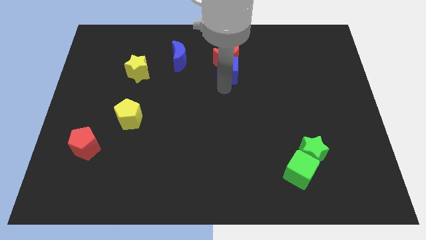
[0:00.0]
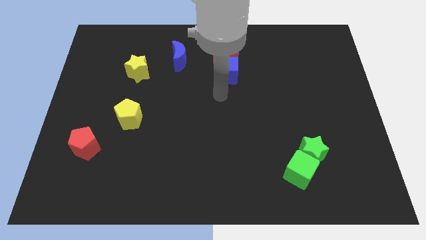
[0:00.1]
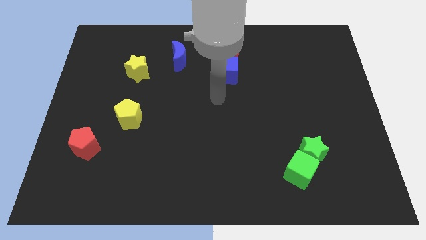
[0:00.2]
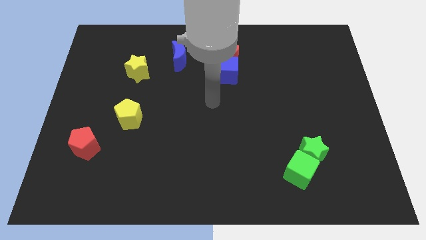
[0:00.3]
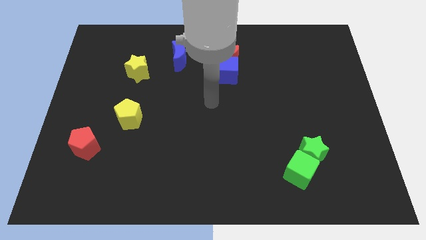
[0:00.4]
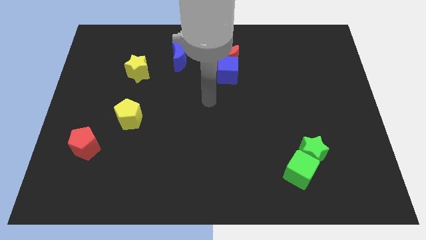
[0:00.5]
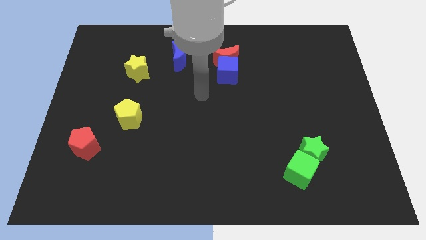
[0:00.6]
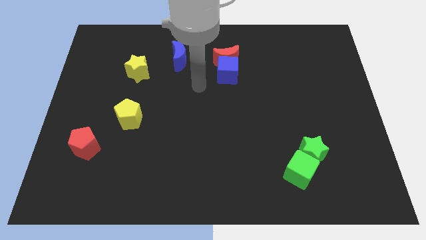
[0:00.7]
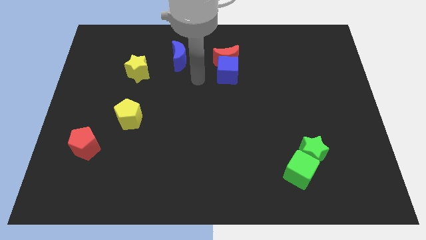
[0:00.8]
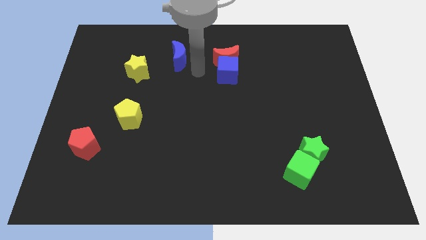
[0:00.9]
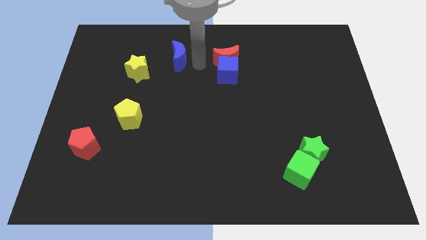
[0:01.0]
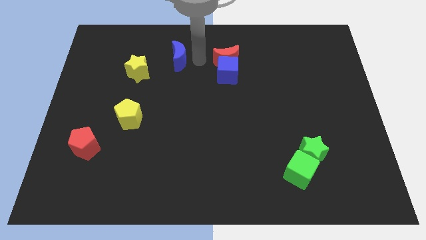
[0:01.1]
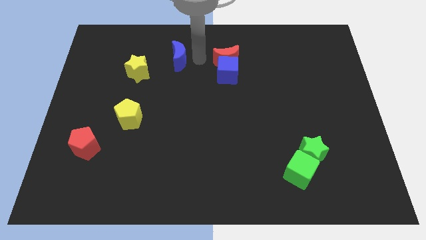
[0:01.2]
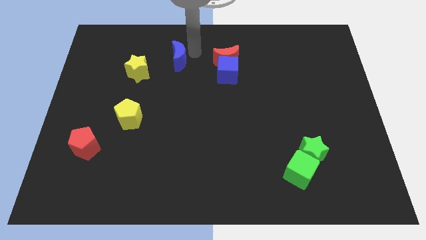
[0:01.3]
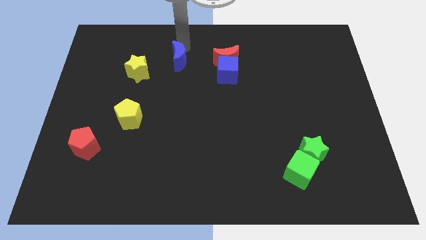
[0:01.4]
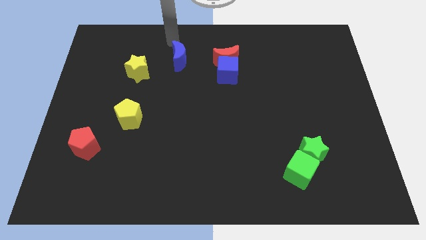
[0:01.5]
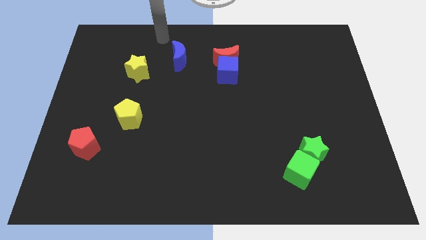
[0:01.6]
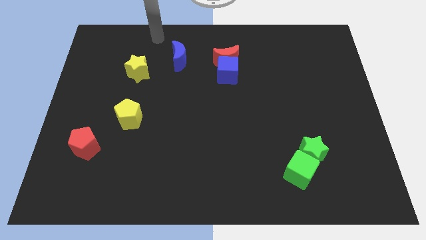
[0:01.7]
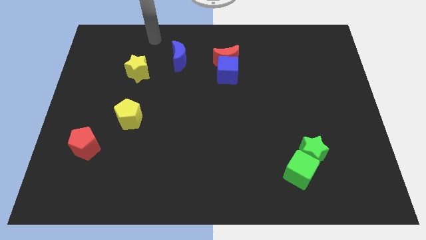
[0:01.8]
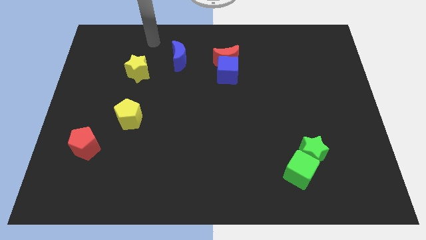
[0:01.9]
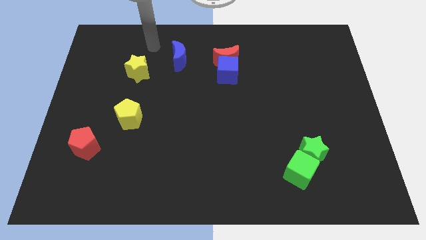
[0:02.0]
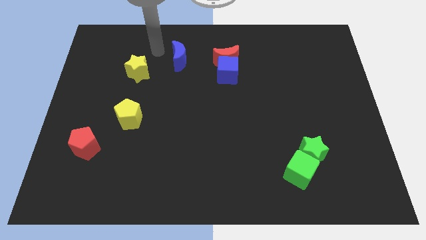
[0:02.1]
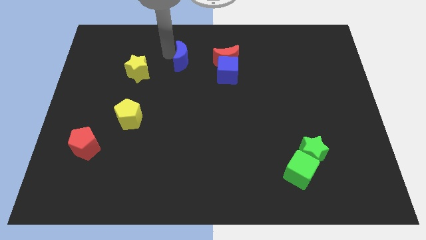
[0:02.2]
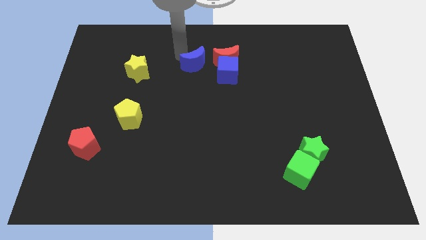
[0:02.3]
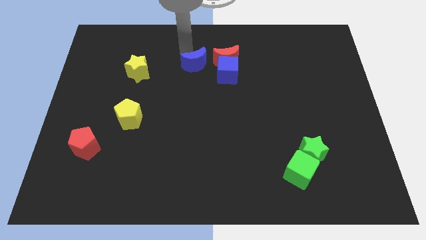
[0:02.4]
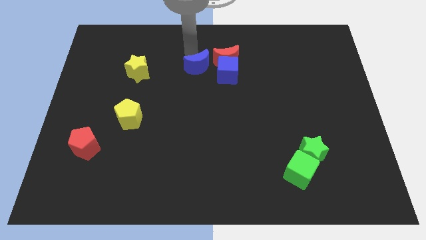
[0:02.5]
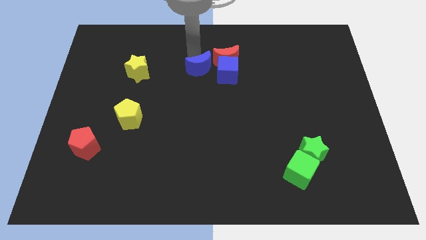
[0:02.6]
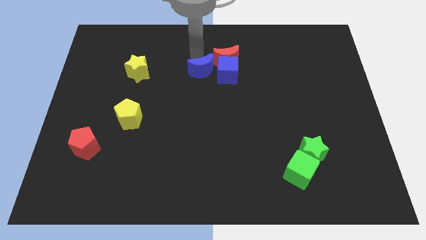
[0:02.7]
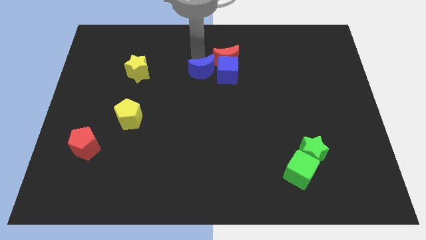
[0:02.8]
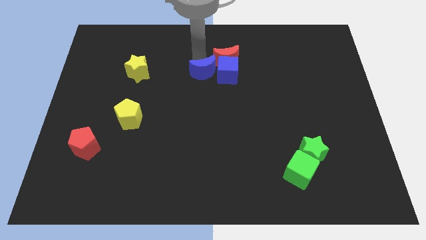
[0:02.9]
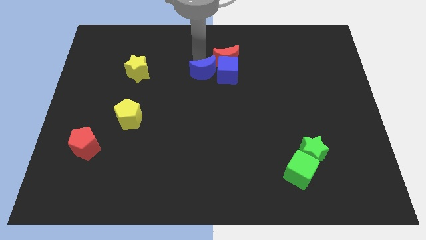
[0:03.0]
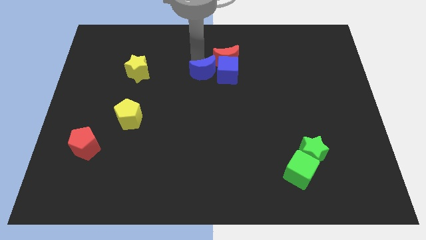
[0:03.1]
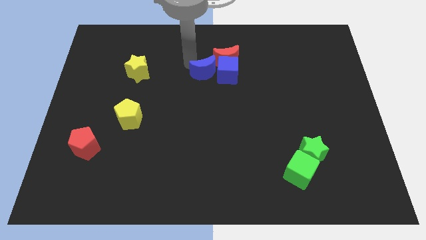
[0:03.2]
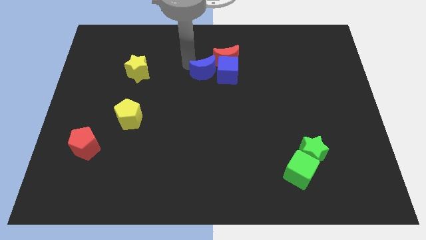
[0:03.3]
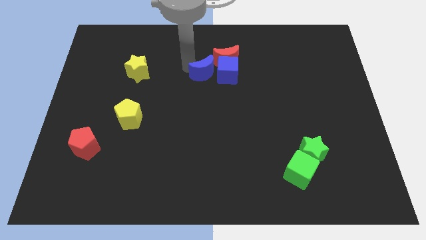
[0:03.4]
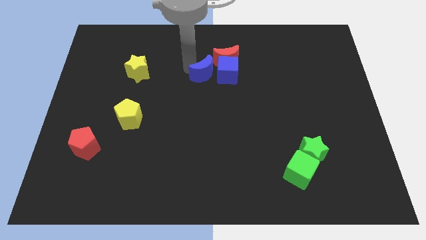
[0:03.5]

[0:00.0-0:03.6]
place the blue moon left to the blue cube

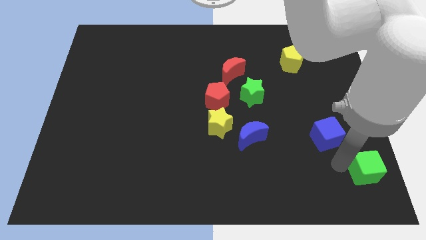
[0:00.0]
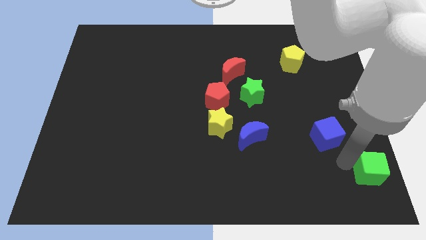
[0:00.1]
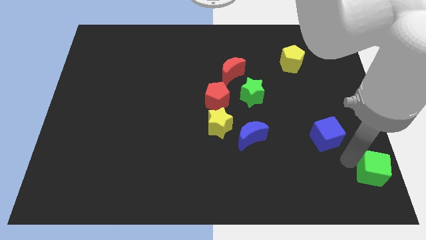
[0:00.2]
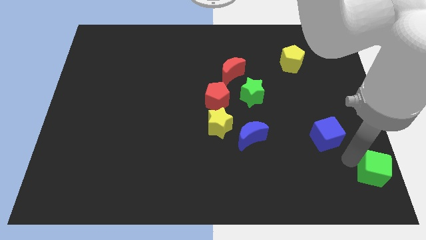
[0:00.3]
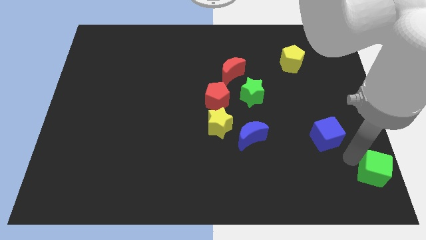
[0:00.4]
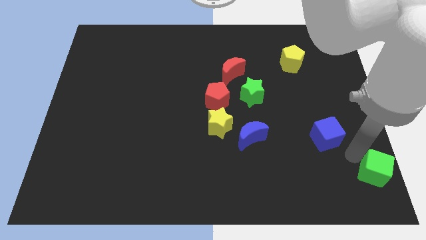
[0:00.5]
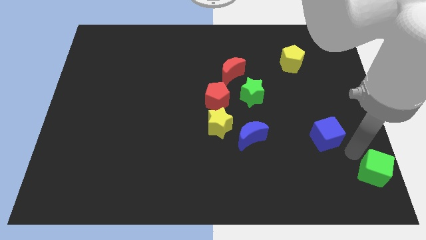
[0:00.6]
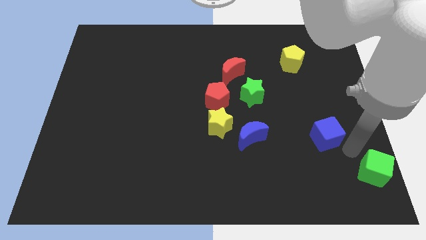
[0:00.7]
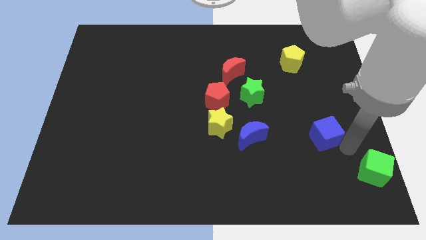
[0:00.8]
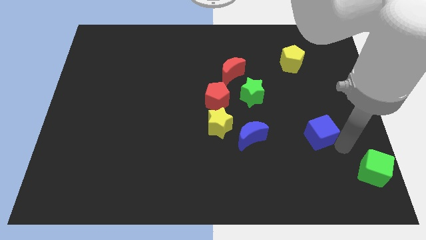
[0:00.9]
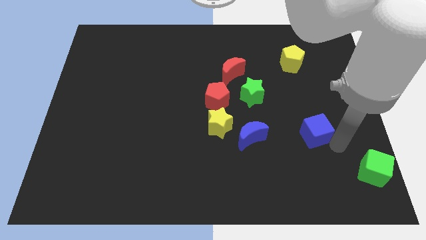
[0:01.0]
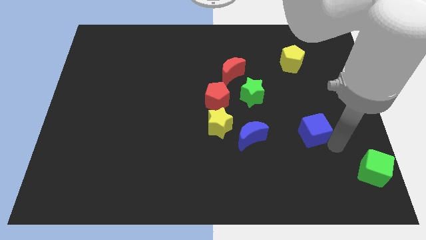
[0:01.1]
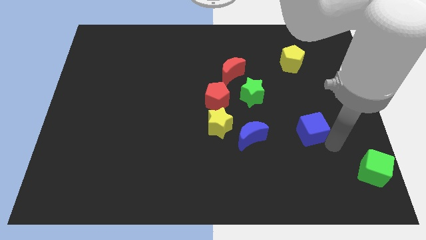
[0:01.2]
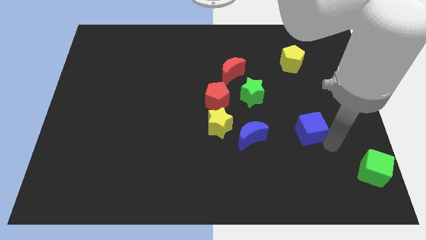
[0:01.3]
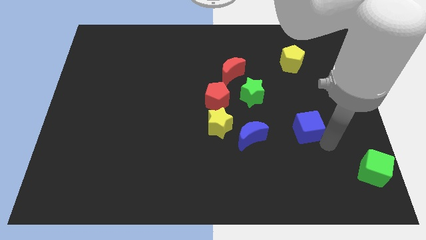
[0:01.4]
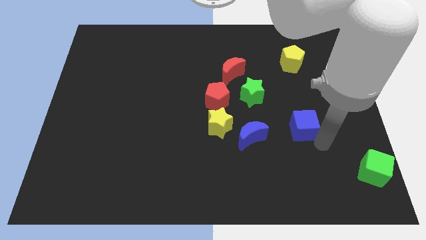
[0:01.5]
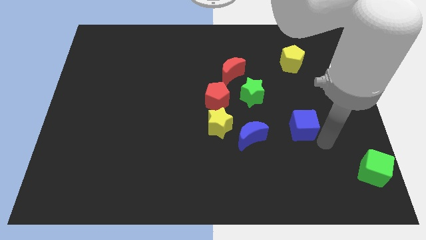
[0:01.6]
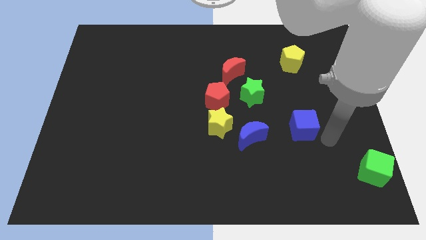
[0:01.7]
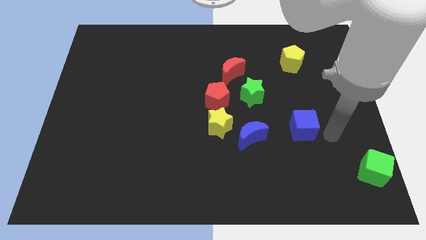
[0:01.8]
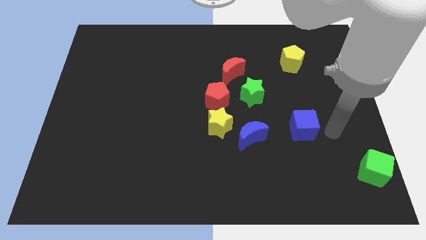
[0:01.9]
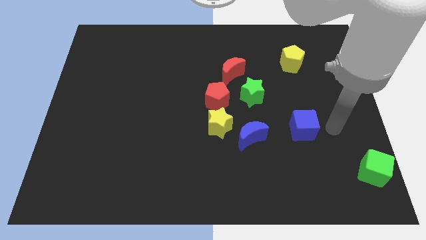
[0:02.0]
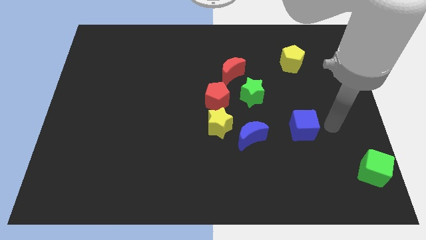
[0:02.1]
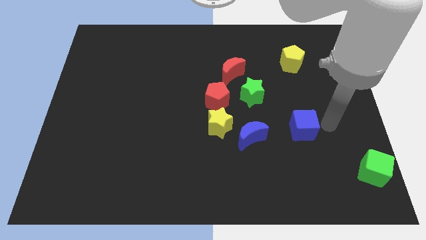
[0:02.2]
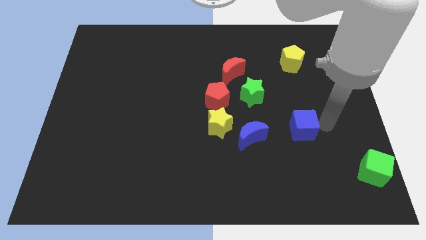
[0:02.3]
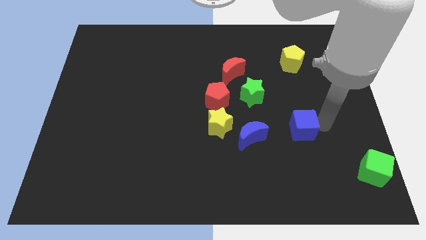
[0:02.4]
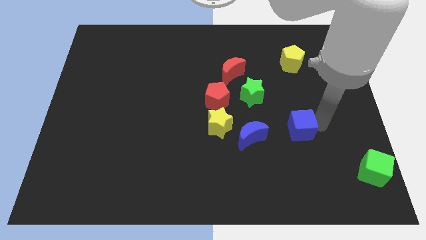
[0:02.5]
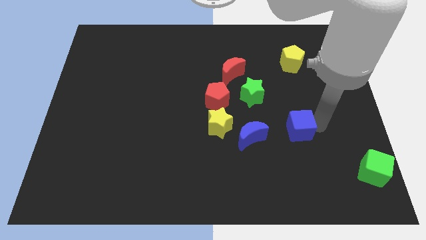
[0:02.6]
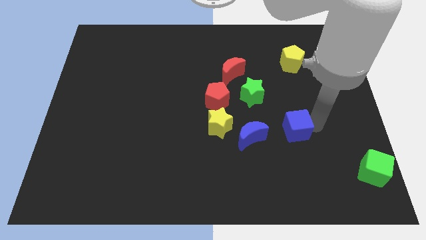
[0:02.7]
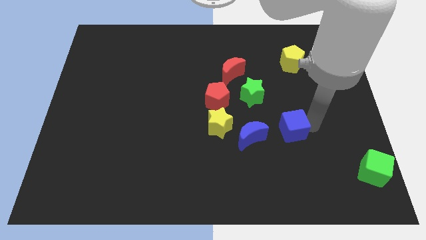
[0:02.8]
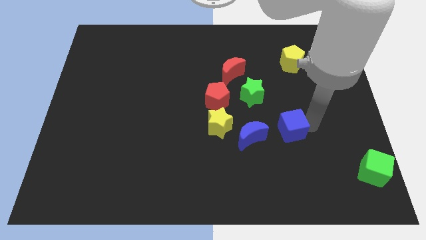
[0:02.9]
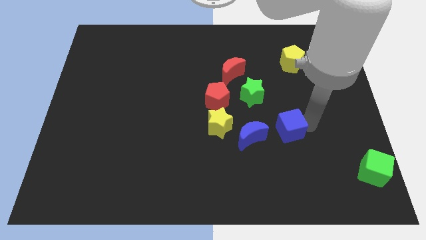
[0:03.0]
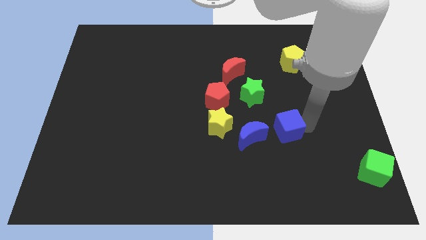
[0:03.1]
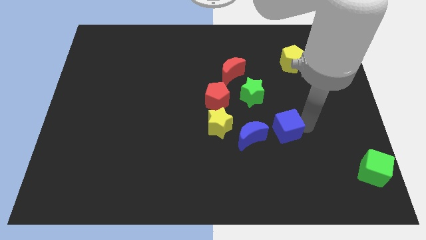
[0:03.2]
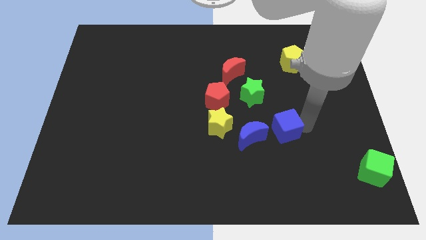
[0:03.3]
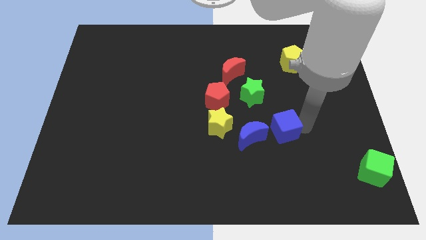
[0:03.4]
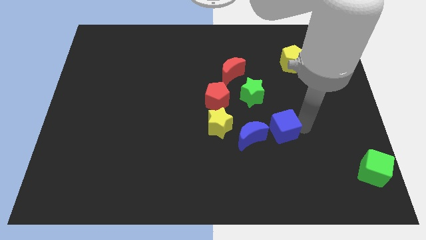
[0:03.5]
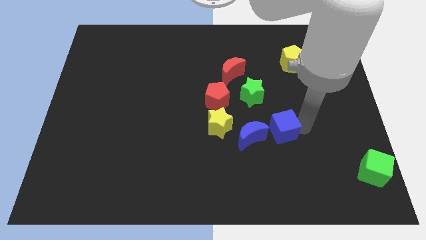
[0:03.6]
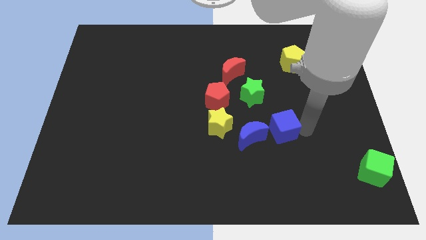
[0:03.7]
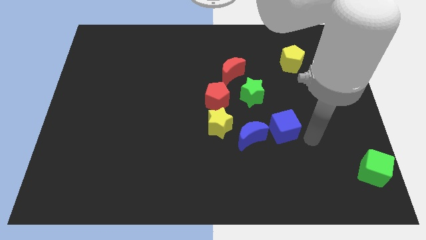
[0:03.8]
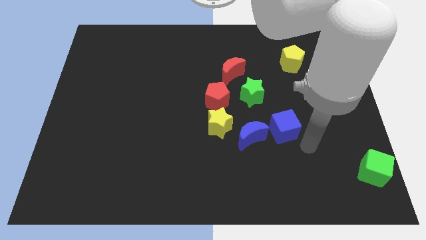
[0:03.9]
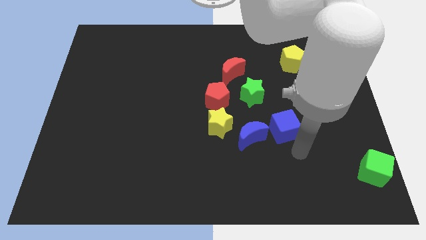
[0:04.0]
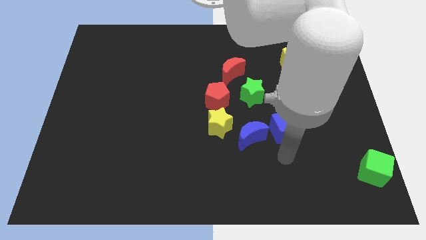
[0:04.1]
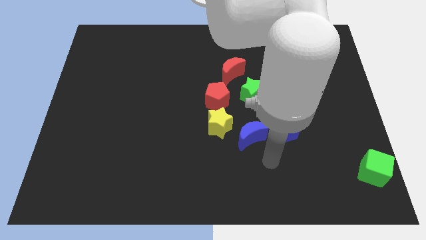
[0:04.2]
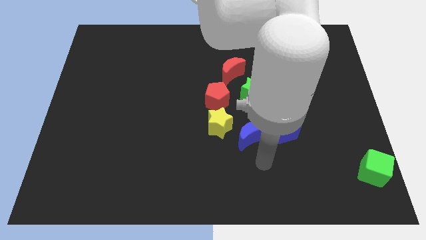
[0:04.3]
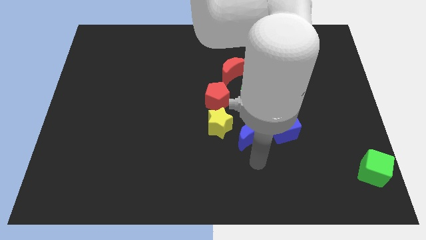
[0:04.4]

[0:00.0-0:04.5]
move the blue cube to the right of the blue crescent

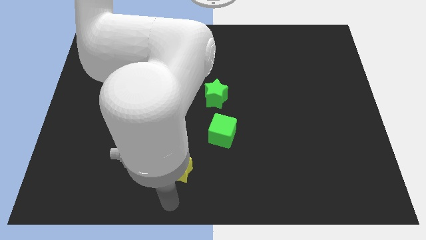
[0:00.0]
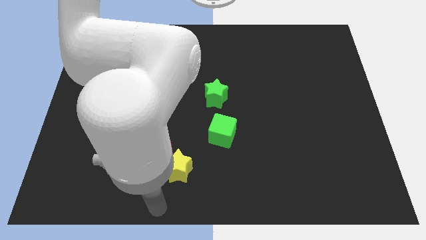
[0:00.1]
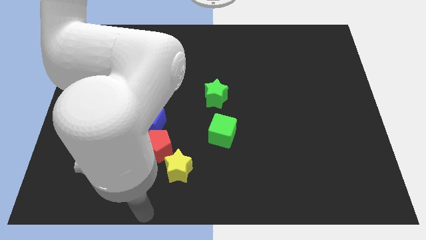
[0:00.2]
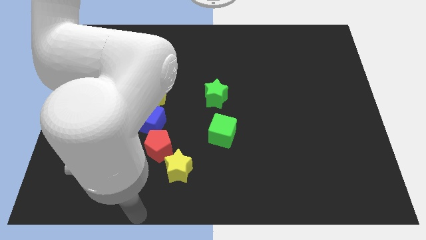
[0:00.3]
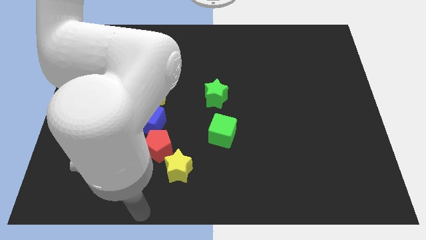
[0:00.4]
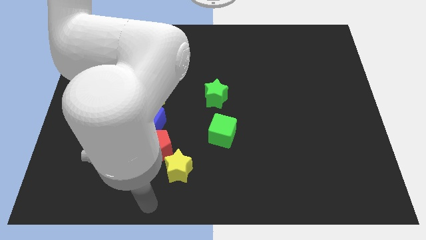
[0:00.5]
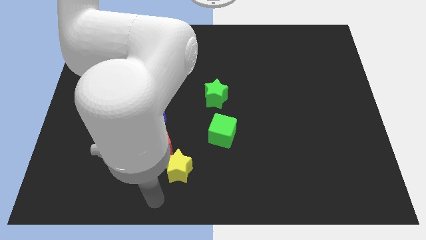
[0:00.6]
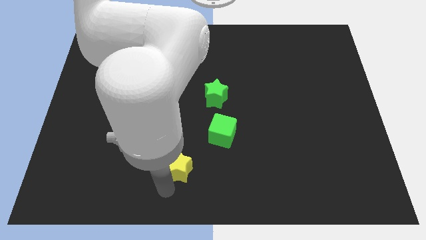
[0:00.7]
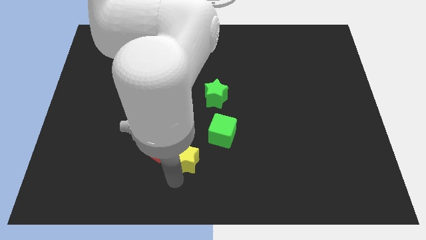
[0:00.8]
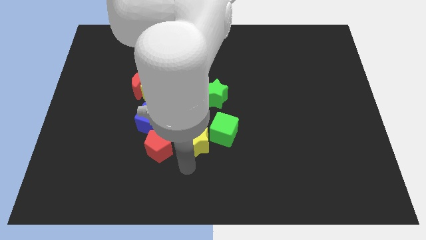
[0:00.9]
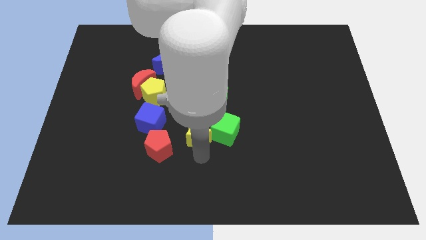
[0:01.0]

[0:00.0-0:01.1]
push yellow star into green cube
